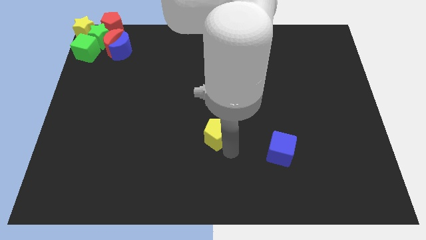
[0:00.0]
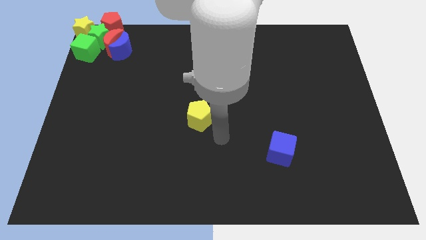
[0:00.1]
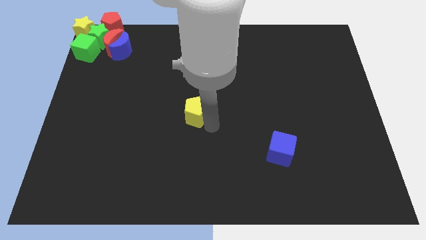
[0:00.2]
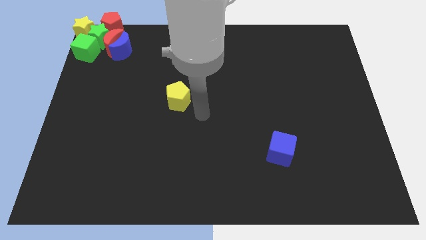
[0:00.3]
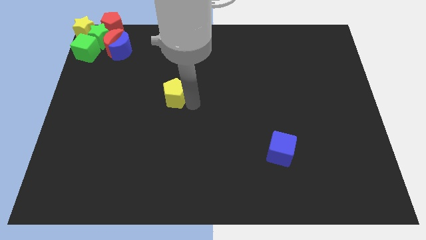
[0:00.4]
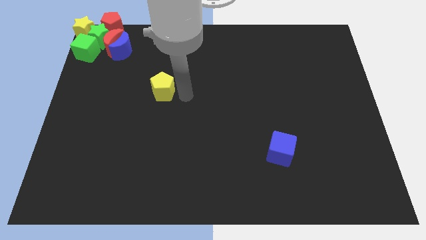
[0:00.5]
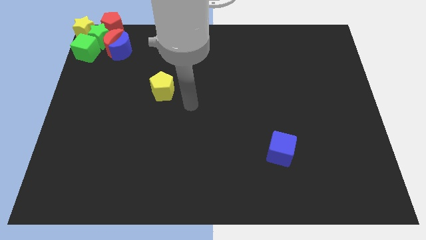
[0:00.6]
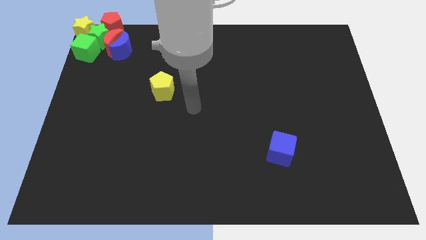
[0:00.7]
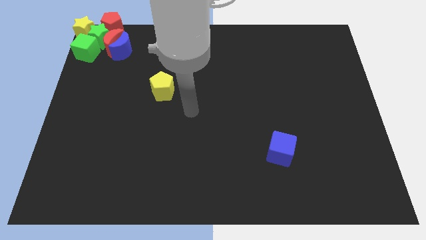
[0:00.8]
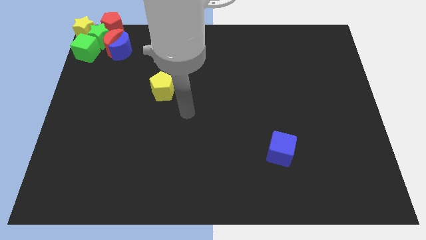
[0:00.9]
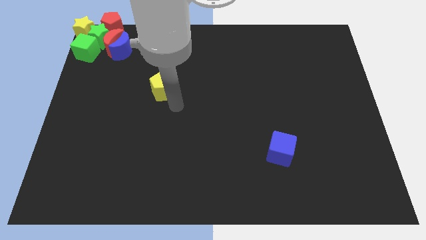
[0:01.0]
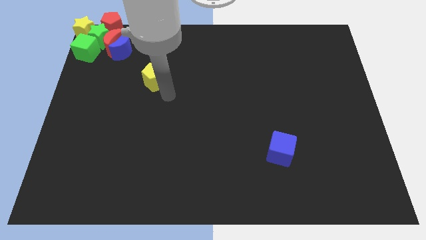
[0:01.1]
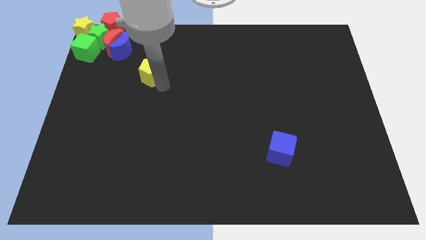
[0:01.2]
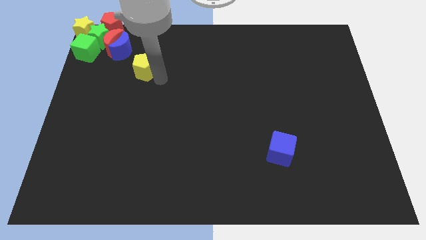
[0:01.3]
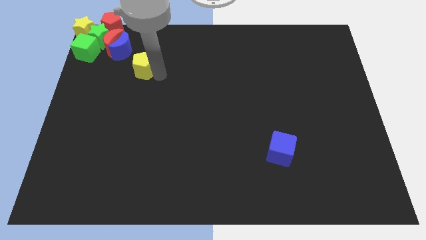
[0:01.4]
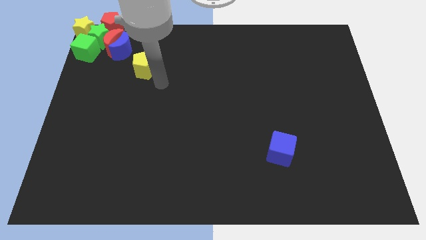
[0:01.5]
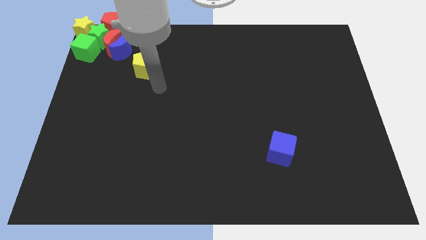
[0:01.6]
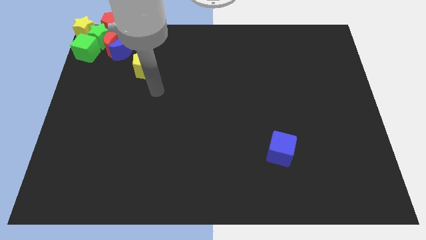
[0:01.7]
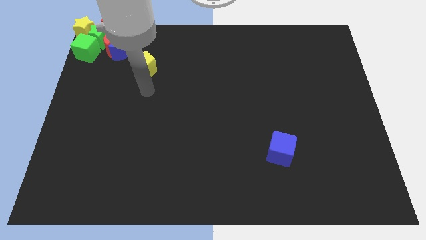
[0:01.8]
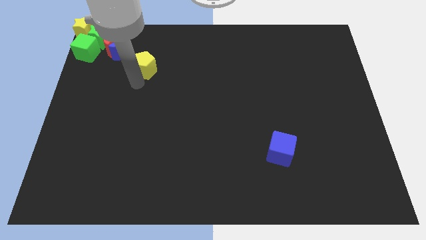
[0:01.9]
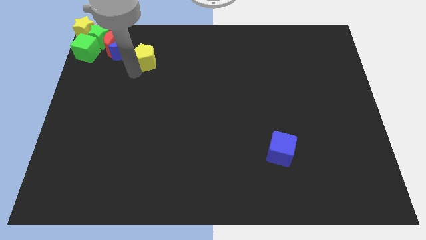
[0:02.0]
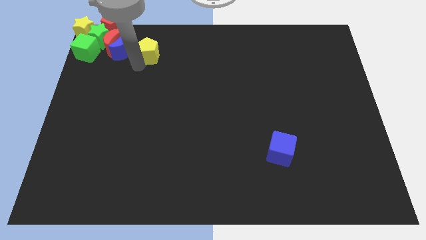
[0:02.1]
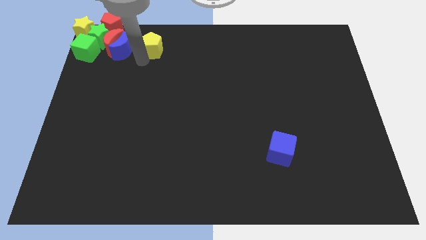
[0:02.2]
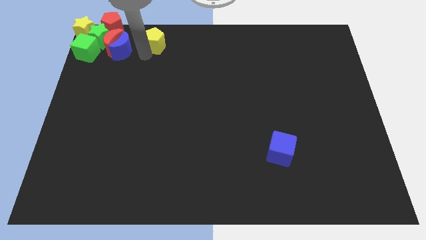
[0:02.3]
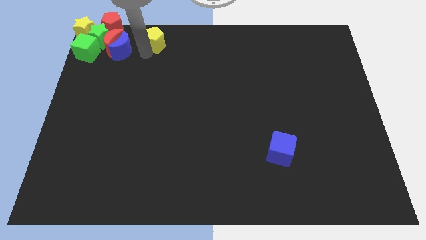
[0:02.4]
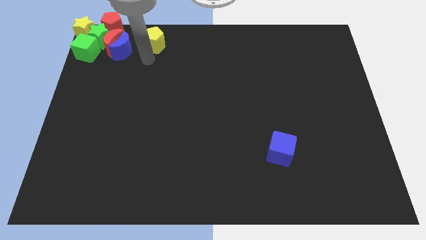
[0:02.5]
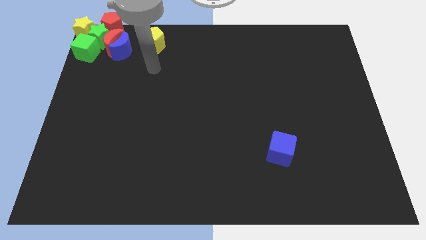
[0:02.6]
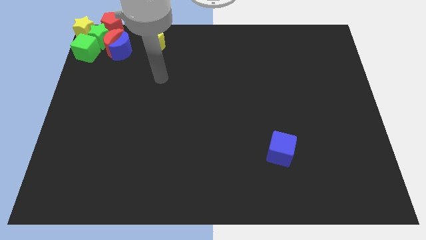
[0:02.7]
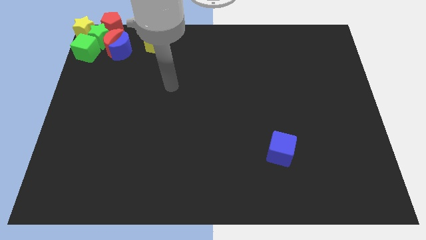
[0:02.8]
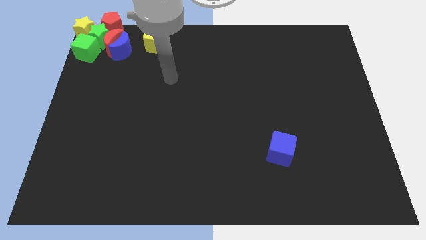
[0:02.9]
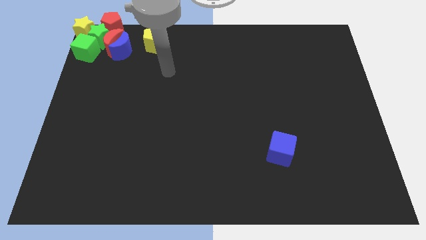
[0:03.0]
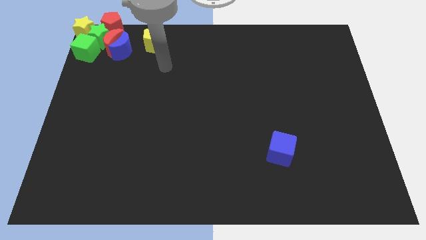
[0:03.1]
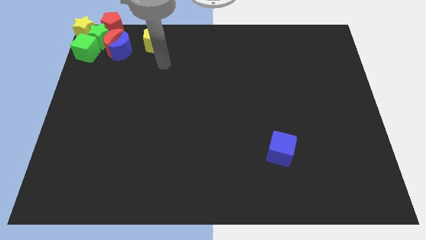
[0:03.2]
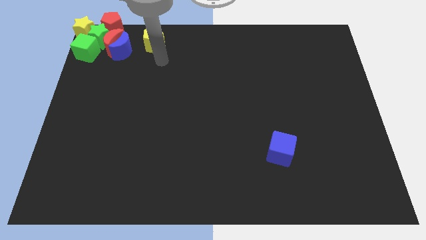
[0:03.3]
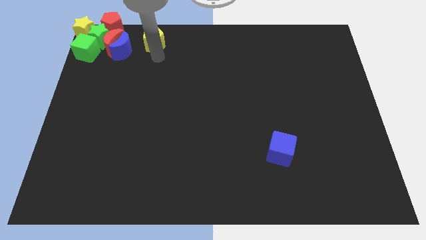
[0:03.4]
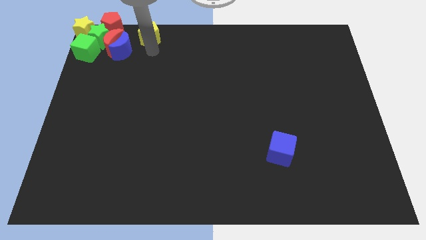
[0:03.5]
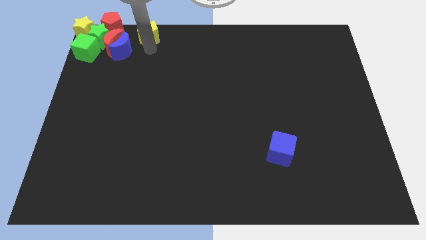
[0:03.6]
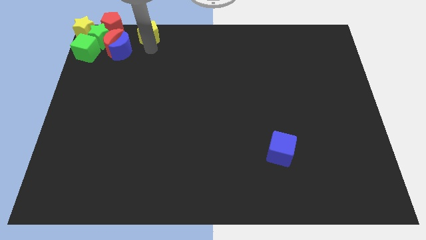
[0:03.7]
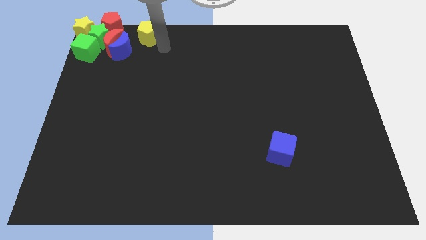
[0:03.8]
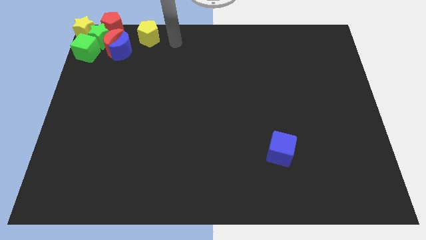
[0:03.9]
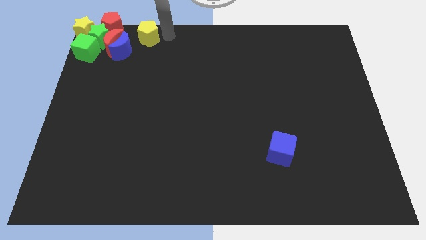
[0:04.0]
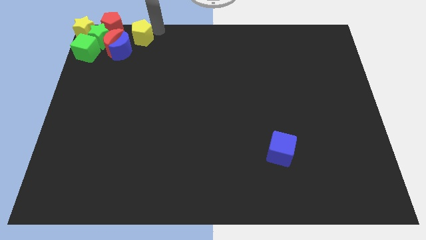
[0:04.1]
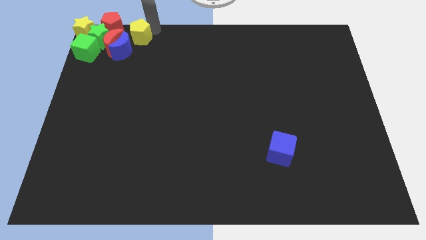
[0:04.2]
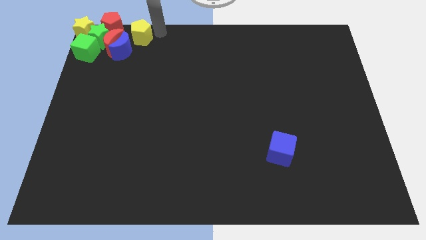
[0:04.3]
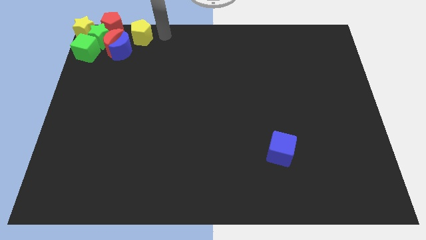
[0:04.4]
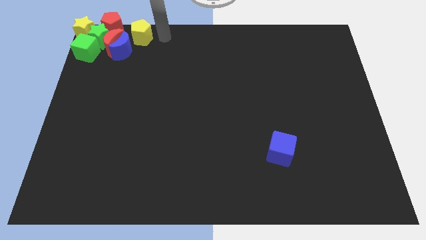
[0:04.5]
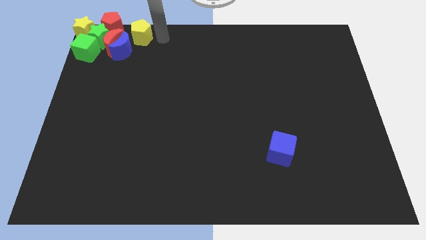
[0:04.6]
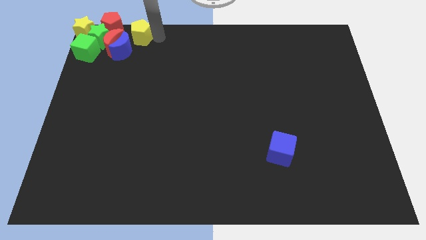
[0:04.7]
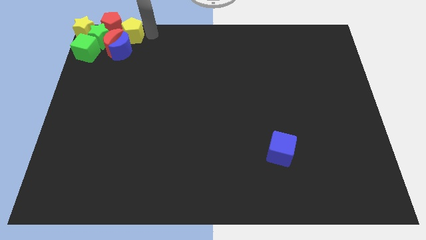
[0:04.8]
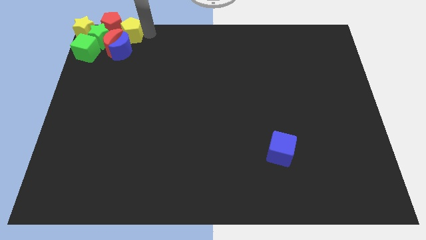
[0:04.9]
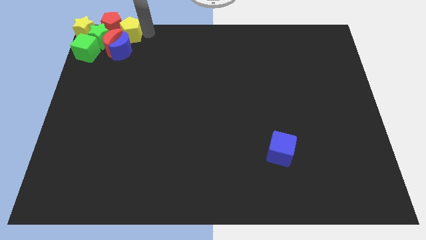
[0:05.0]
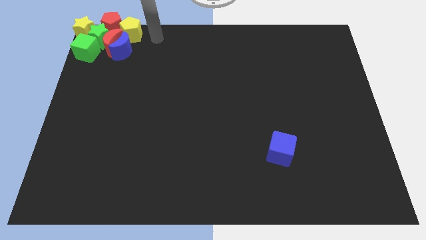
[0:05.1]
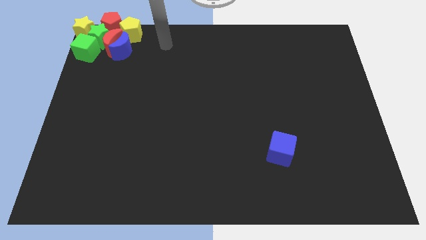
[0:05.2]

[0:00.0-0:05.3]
push the yellow pentagon into a group of blocks

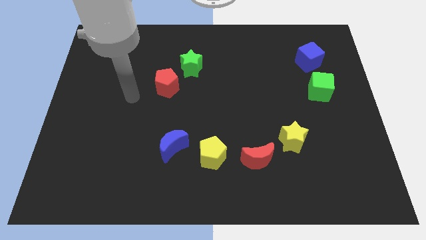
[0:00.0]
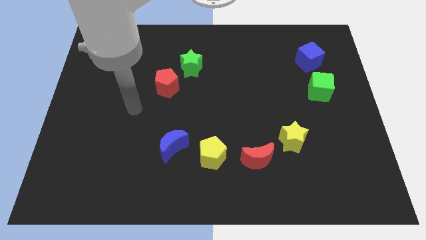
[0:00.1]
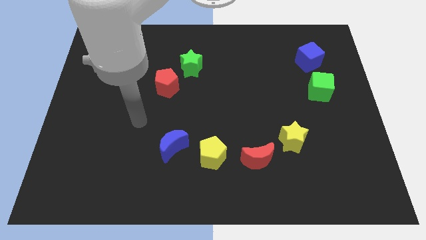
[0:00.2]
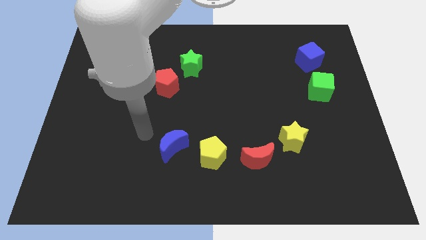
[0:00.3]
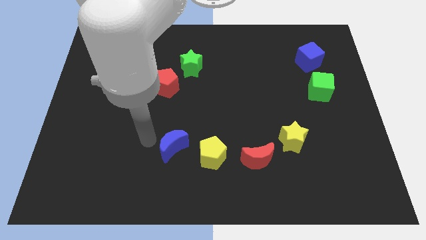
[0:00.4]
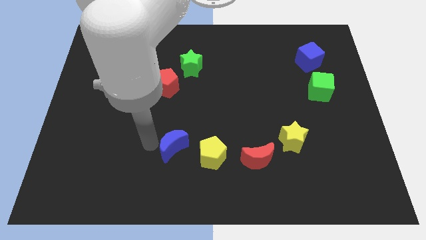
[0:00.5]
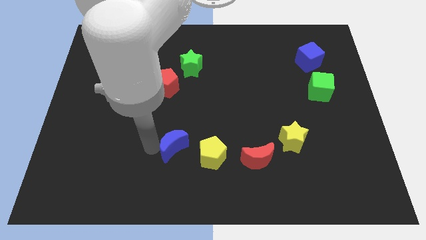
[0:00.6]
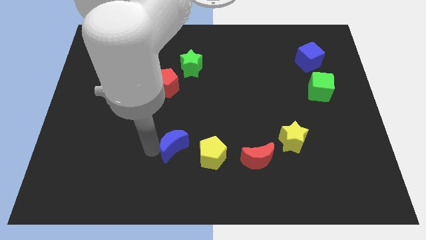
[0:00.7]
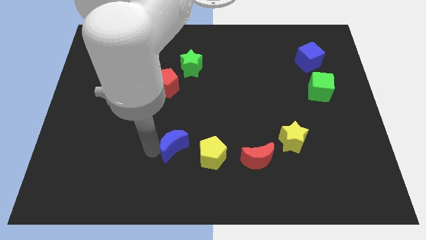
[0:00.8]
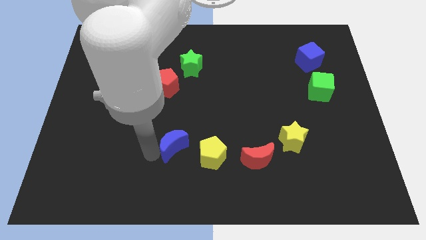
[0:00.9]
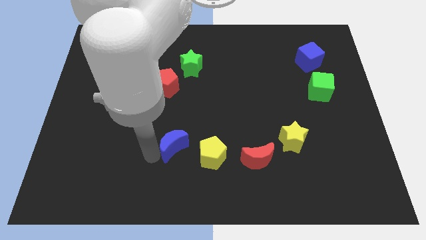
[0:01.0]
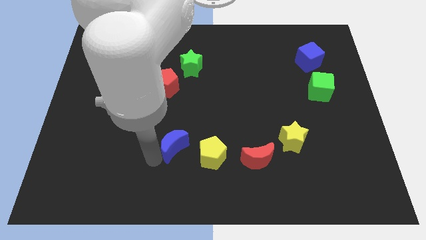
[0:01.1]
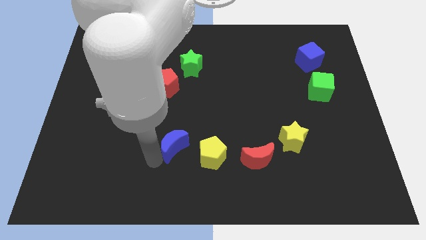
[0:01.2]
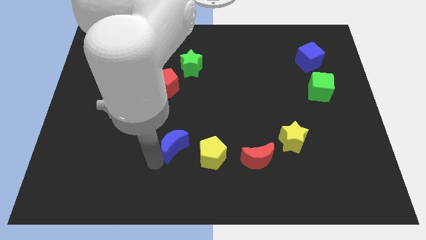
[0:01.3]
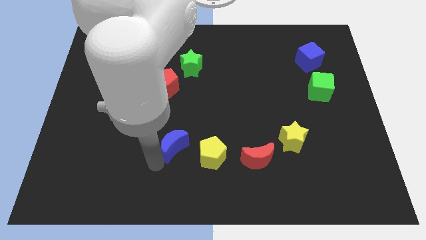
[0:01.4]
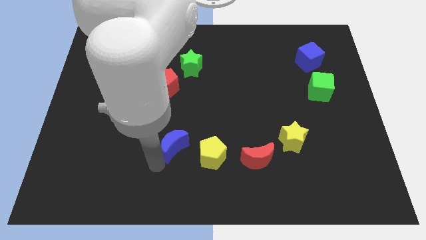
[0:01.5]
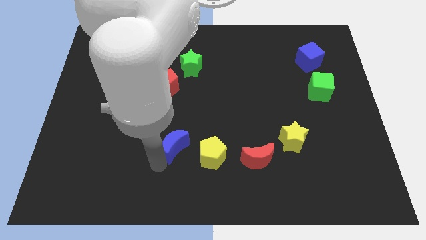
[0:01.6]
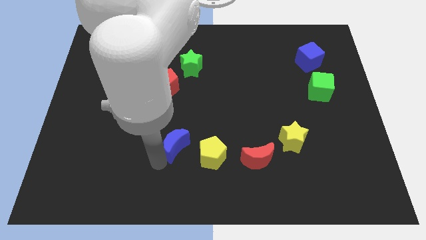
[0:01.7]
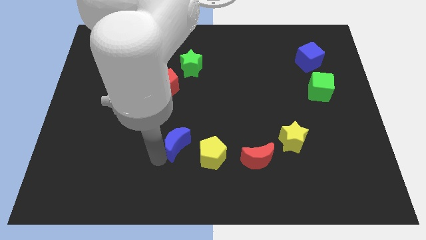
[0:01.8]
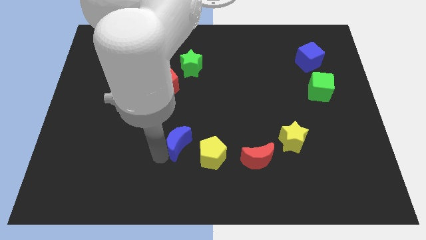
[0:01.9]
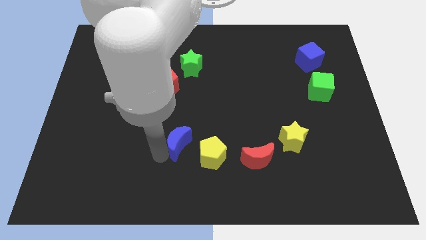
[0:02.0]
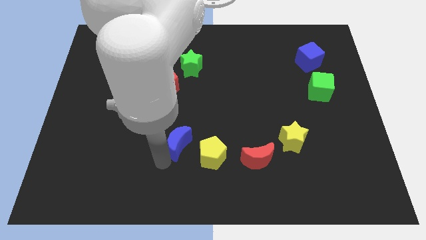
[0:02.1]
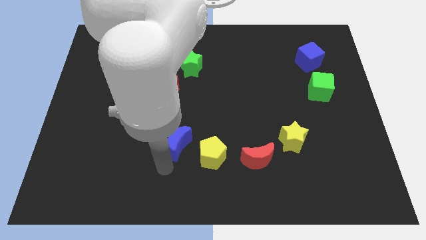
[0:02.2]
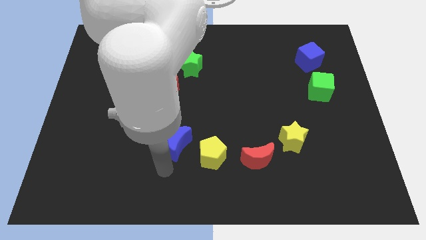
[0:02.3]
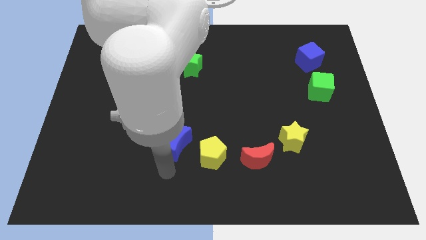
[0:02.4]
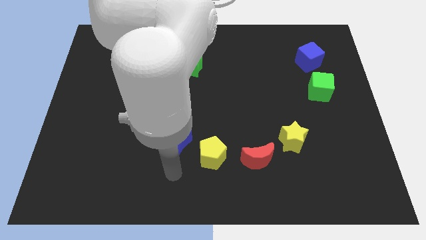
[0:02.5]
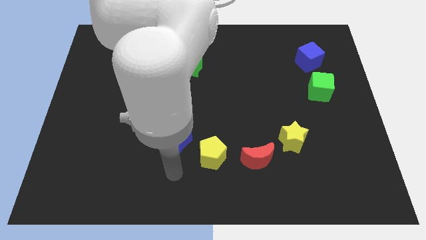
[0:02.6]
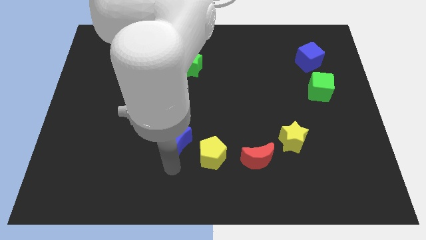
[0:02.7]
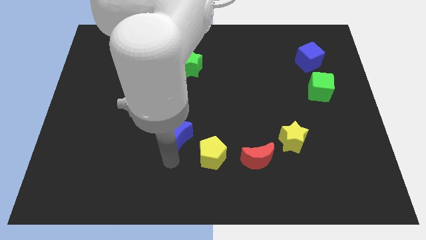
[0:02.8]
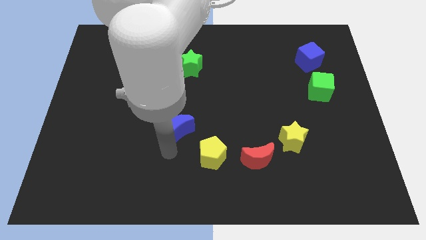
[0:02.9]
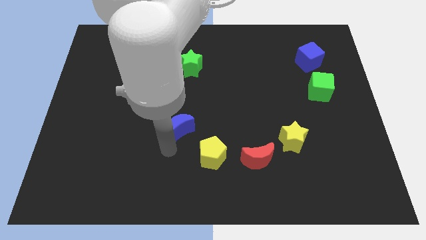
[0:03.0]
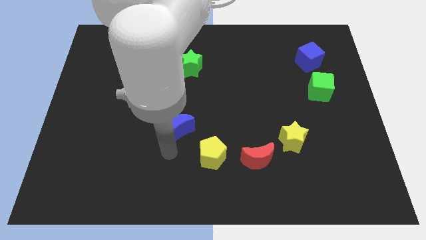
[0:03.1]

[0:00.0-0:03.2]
place blue moon to the top left of yellow pentagon

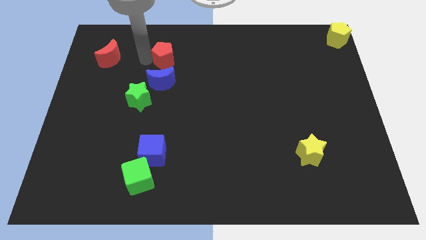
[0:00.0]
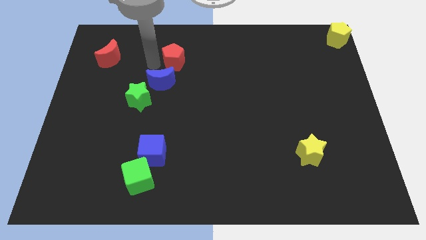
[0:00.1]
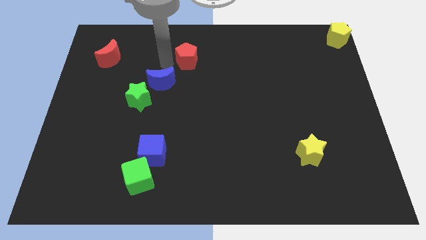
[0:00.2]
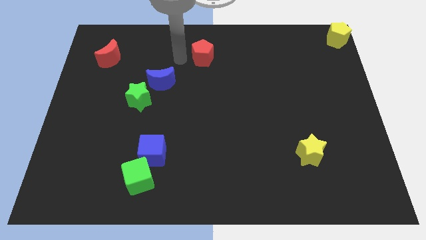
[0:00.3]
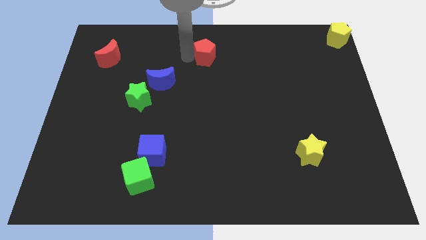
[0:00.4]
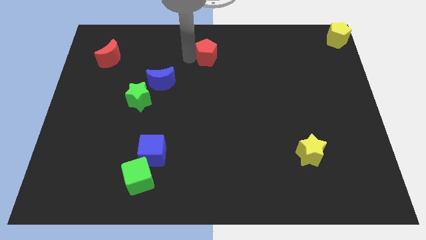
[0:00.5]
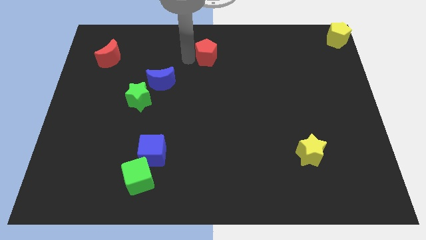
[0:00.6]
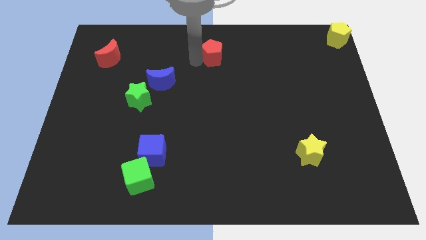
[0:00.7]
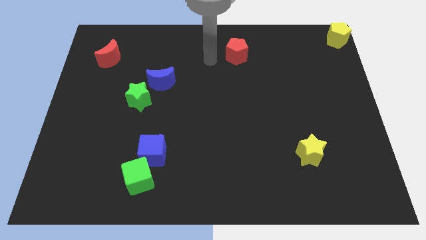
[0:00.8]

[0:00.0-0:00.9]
move the red pentagon to the right of the board
